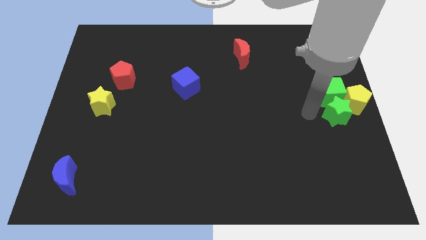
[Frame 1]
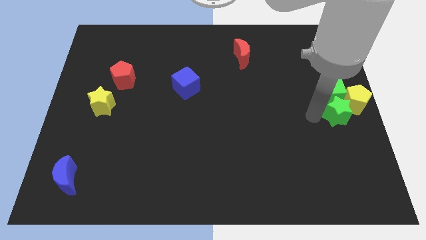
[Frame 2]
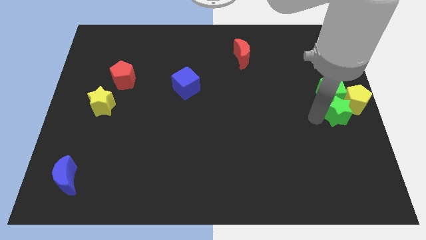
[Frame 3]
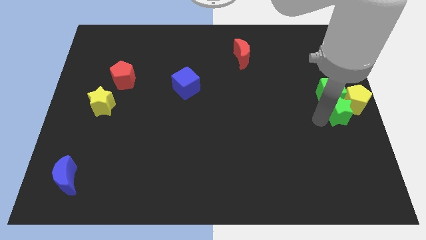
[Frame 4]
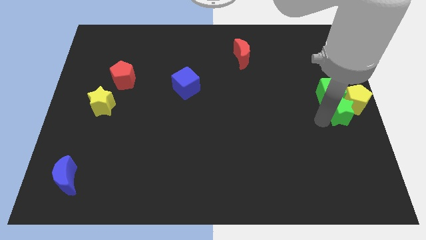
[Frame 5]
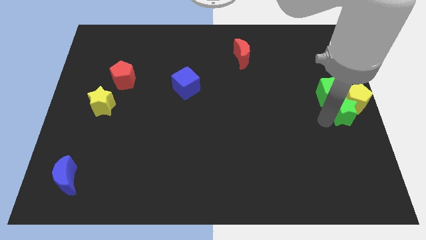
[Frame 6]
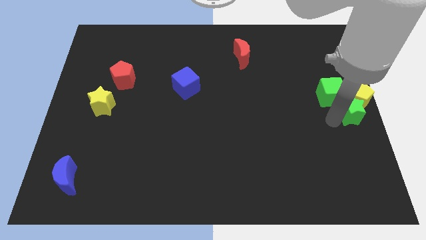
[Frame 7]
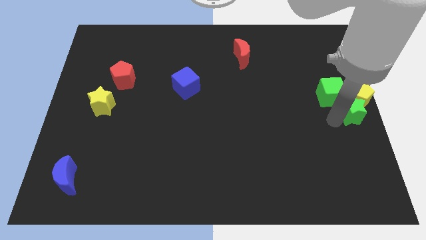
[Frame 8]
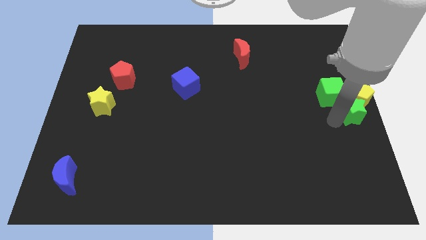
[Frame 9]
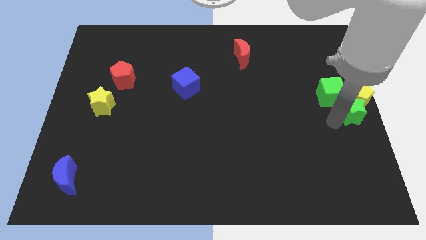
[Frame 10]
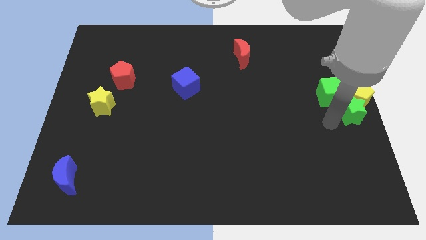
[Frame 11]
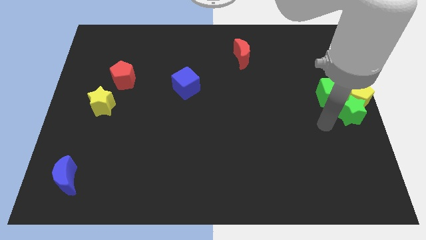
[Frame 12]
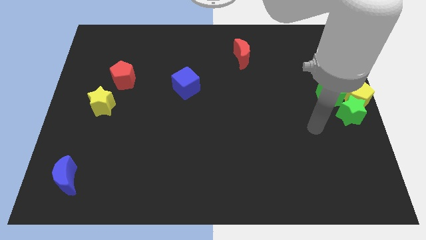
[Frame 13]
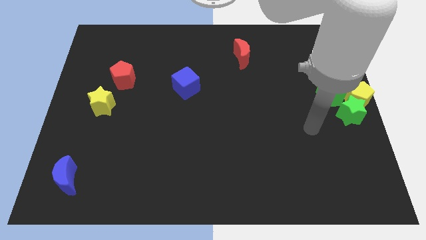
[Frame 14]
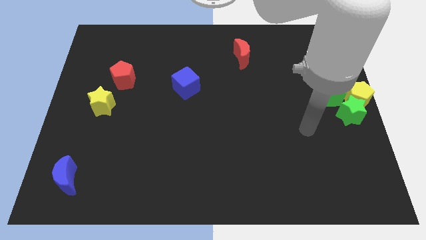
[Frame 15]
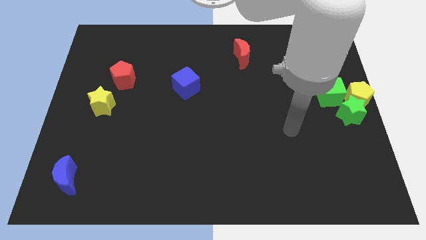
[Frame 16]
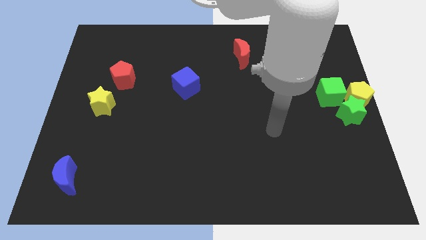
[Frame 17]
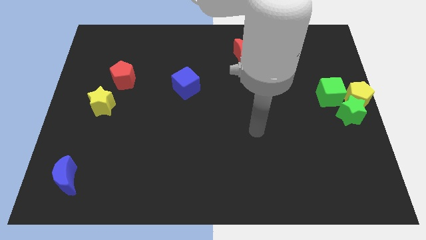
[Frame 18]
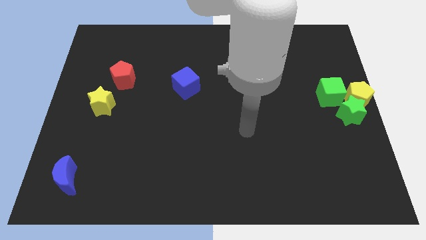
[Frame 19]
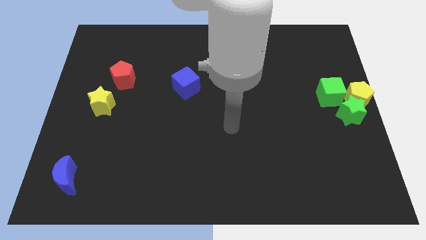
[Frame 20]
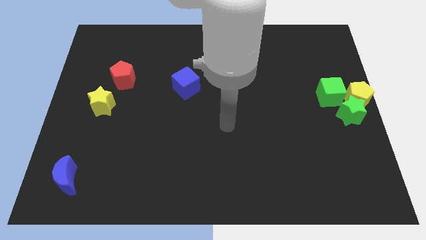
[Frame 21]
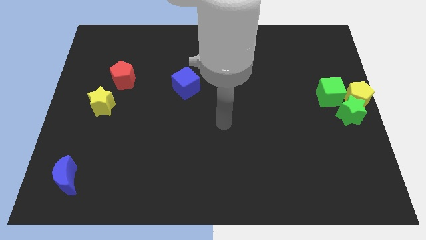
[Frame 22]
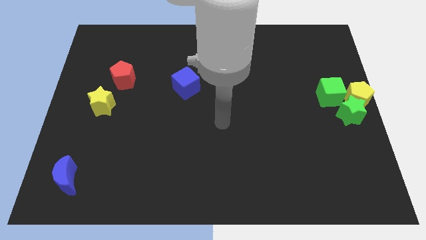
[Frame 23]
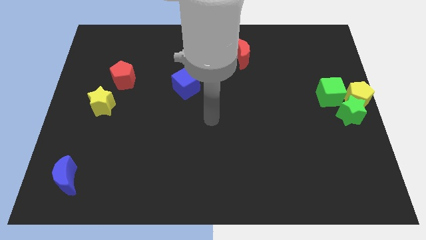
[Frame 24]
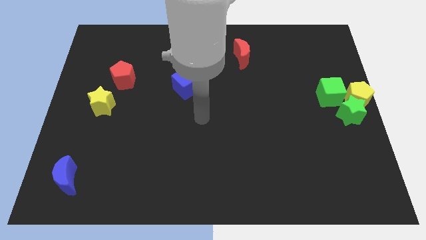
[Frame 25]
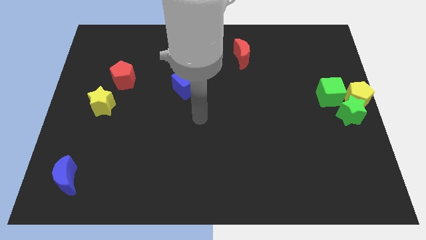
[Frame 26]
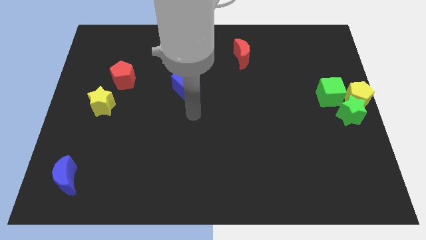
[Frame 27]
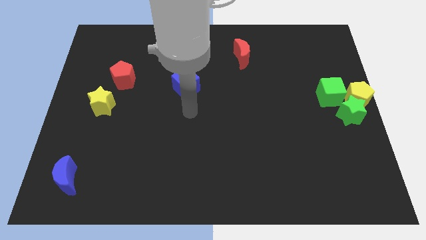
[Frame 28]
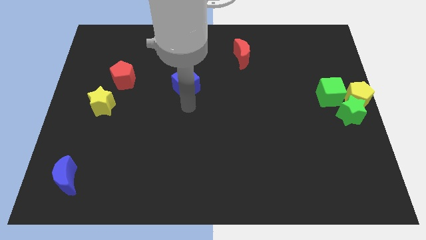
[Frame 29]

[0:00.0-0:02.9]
move the arm below to the blue cube

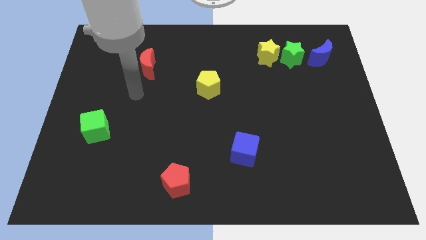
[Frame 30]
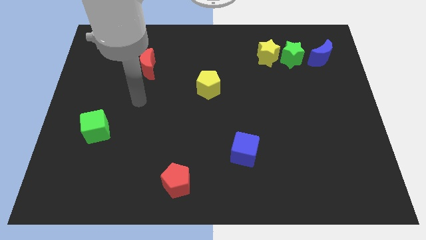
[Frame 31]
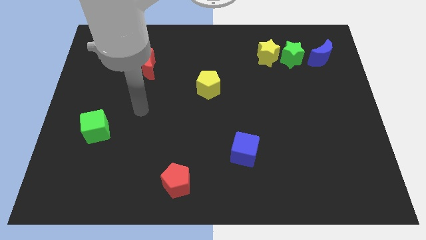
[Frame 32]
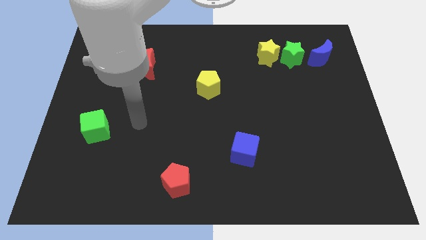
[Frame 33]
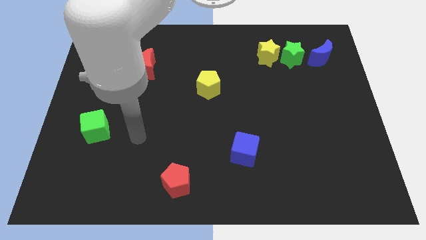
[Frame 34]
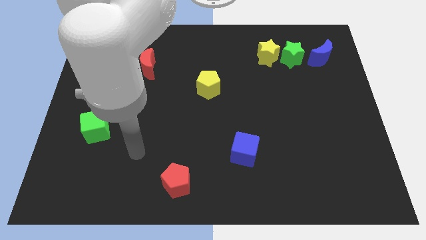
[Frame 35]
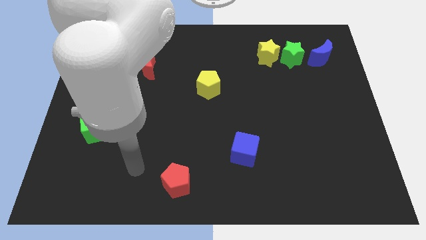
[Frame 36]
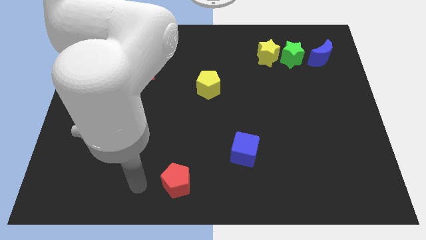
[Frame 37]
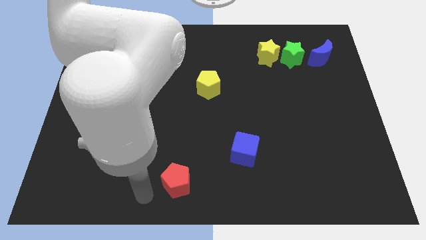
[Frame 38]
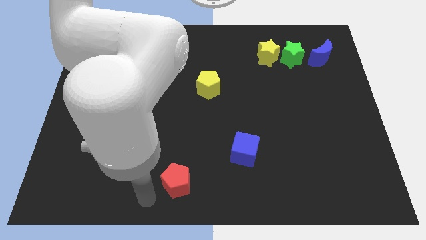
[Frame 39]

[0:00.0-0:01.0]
move your arm to the left of red pentagon

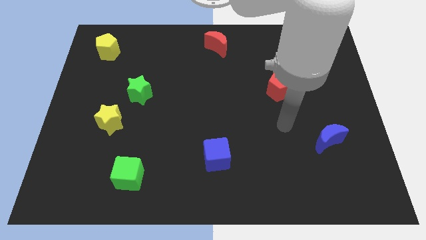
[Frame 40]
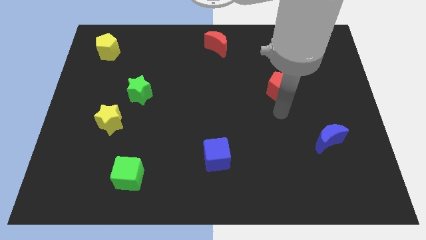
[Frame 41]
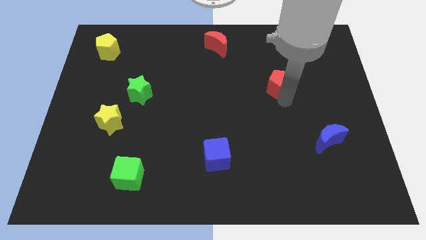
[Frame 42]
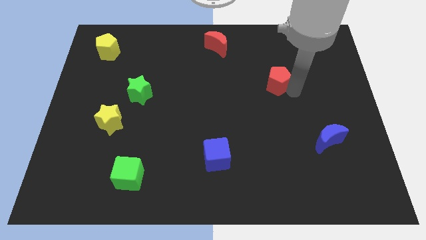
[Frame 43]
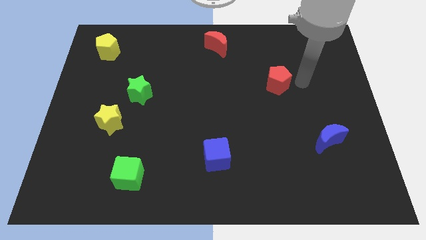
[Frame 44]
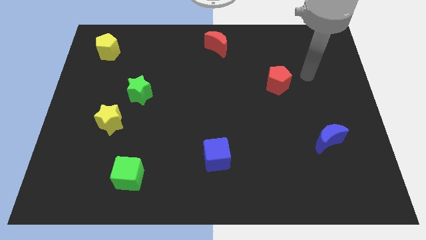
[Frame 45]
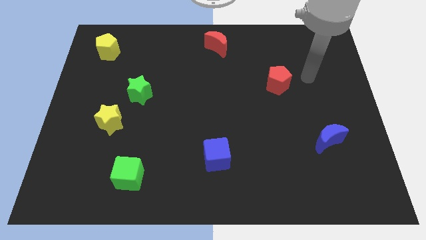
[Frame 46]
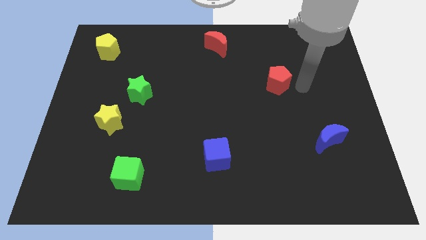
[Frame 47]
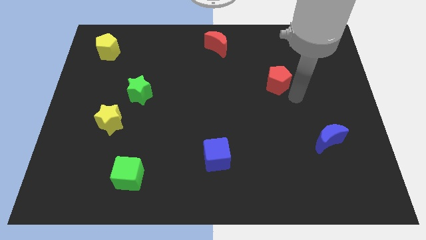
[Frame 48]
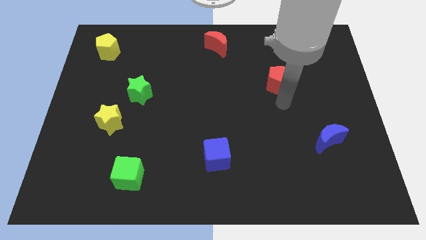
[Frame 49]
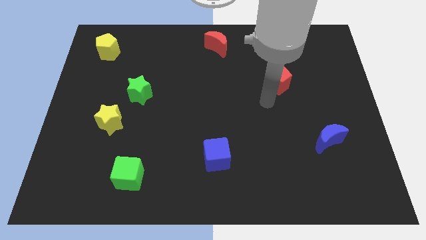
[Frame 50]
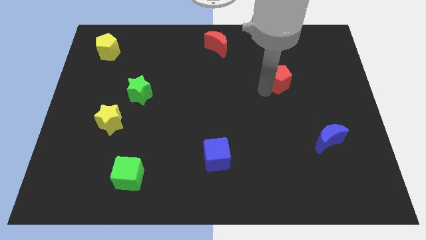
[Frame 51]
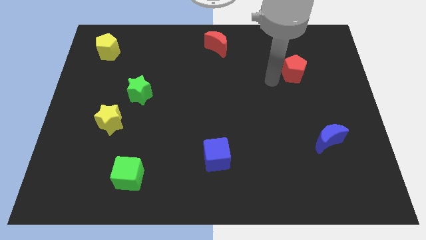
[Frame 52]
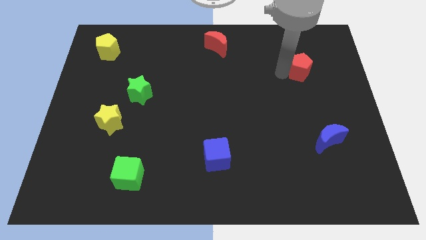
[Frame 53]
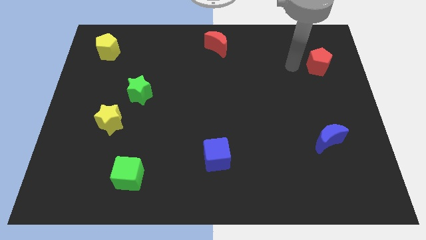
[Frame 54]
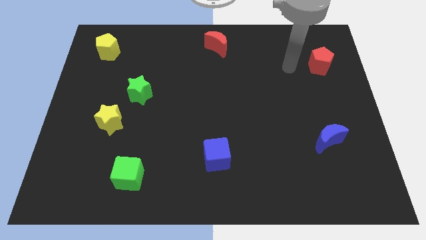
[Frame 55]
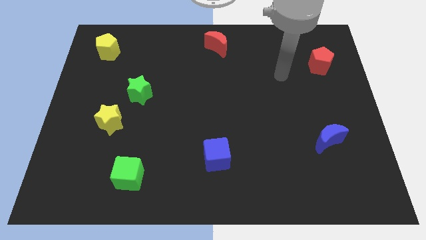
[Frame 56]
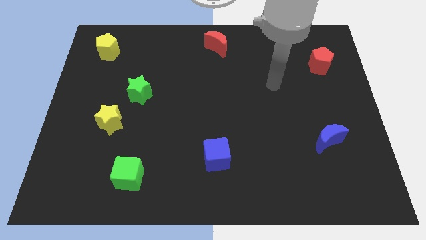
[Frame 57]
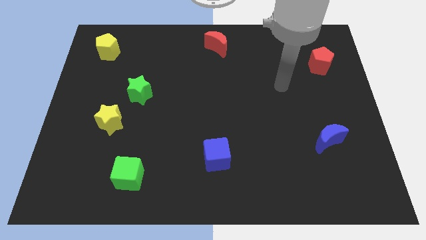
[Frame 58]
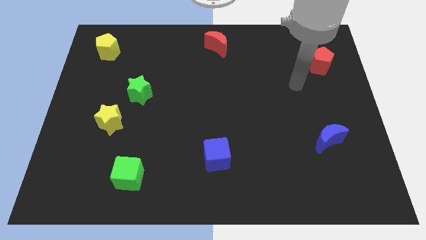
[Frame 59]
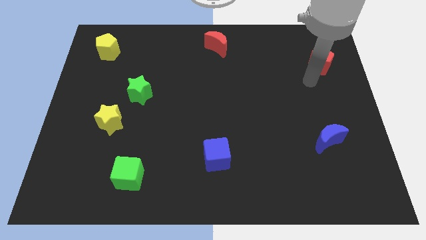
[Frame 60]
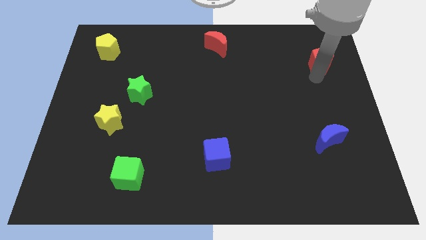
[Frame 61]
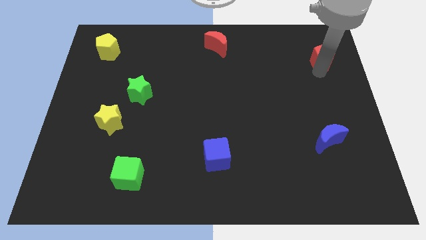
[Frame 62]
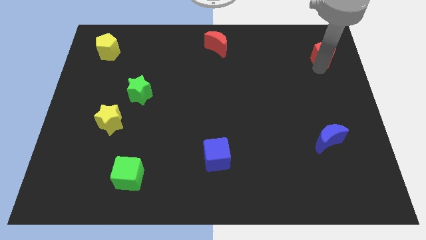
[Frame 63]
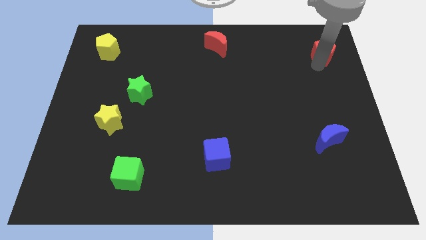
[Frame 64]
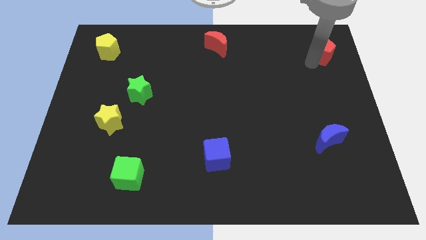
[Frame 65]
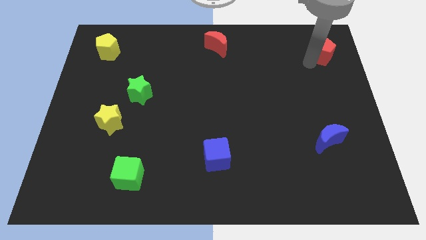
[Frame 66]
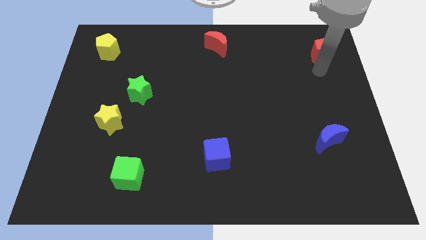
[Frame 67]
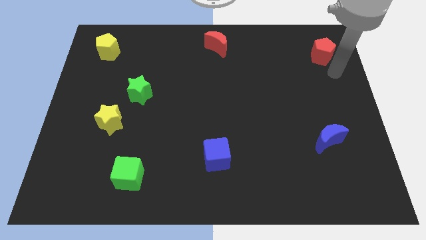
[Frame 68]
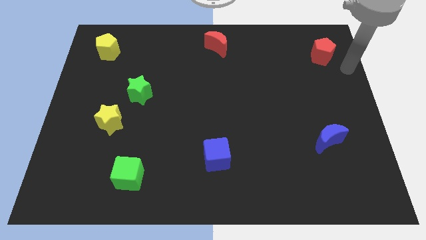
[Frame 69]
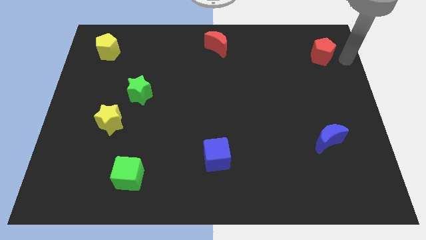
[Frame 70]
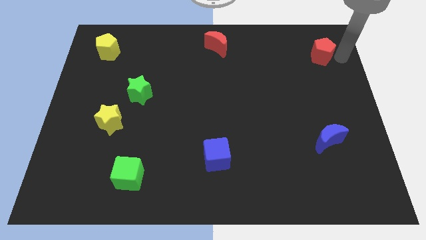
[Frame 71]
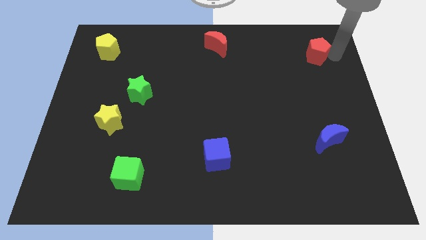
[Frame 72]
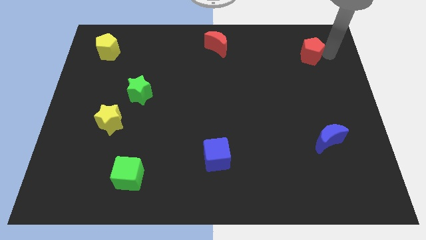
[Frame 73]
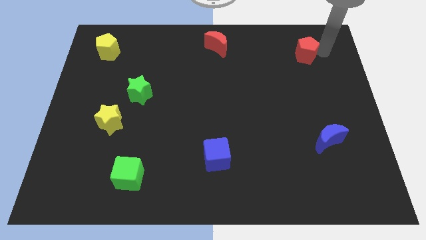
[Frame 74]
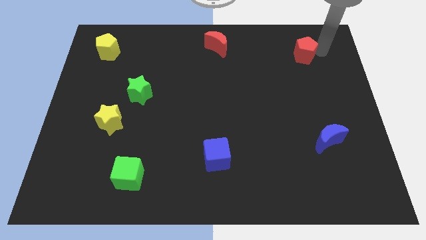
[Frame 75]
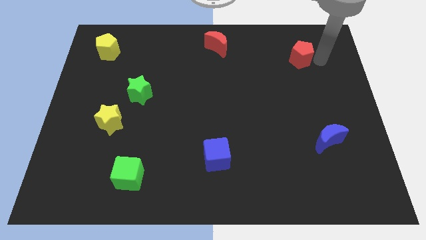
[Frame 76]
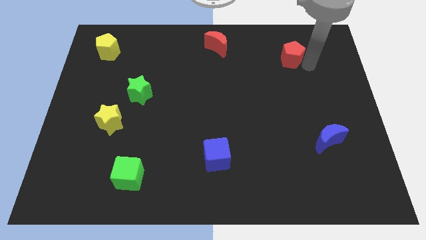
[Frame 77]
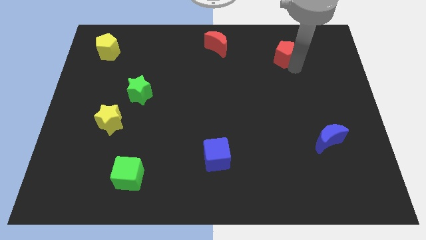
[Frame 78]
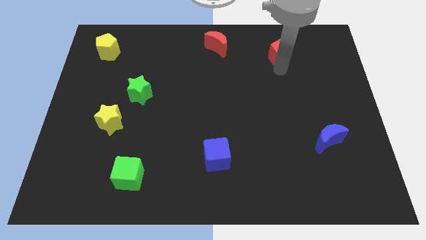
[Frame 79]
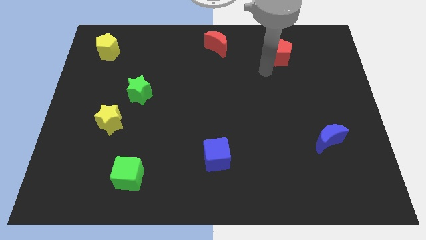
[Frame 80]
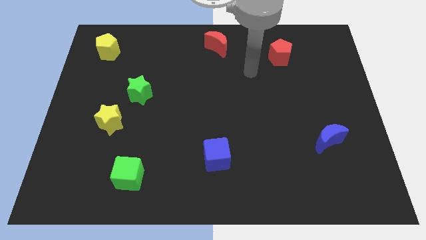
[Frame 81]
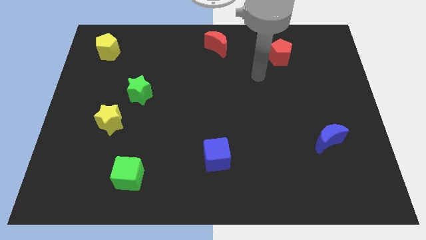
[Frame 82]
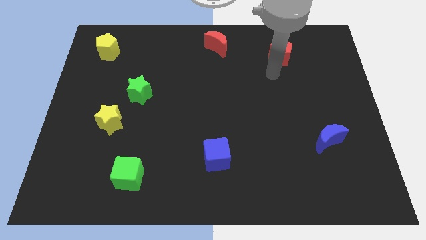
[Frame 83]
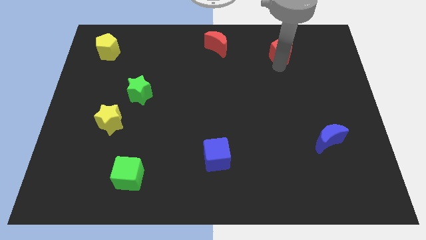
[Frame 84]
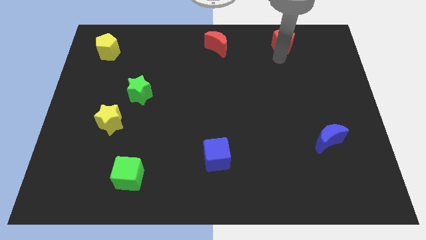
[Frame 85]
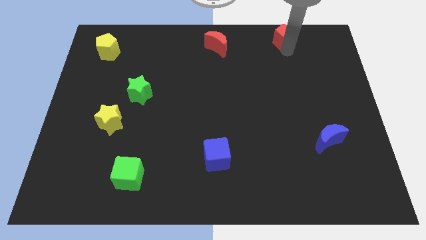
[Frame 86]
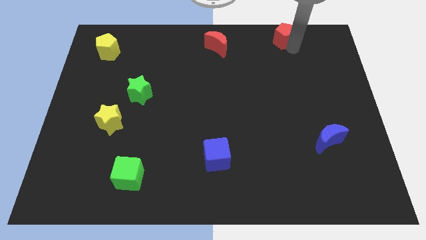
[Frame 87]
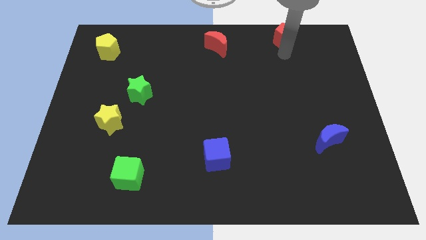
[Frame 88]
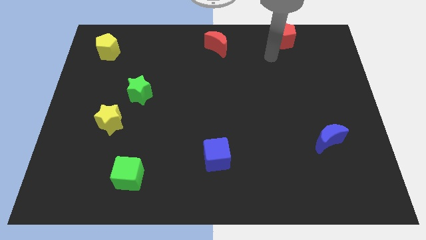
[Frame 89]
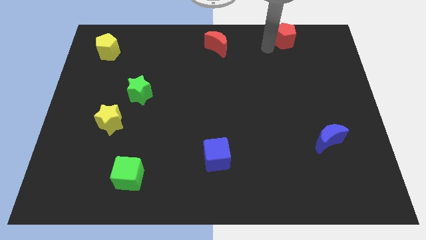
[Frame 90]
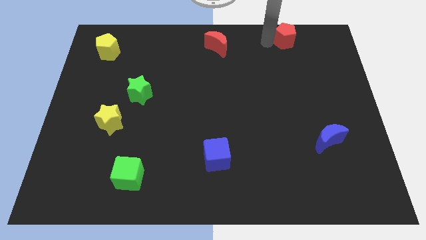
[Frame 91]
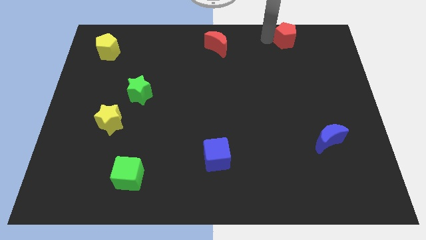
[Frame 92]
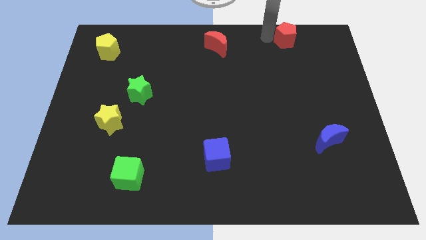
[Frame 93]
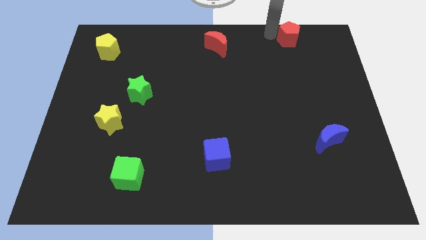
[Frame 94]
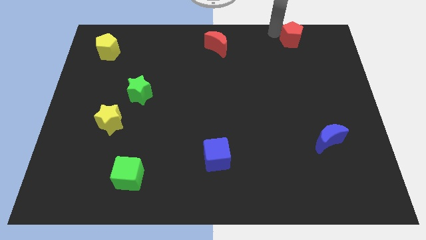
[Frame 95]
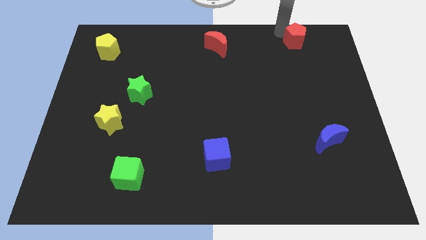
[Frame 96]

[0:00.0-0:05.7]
move the red pentagon towards the top right side of the board
